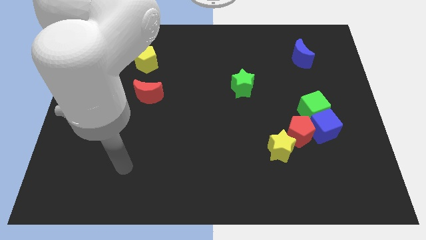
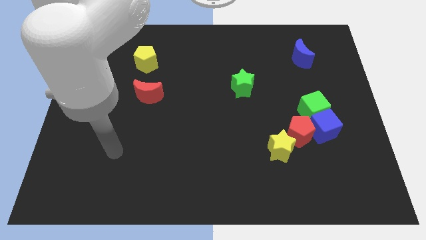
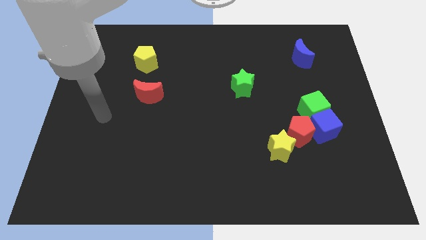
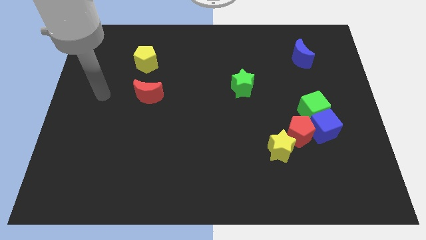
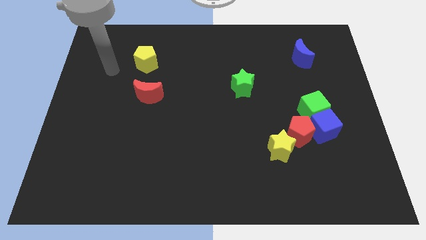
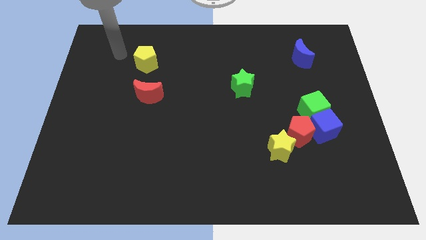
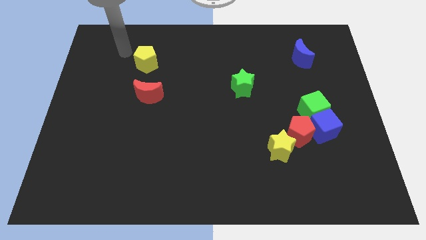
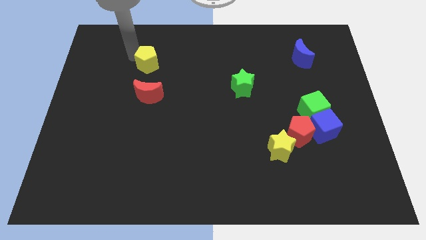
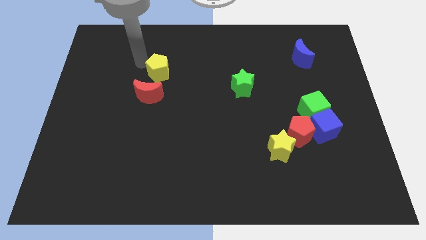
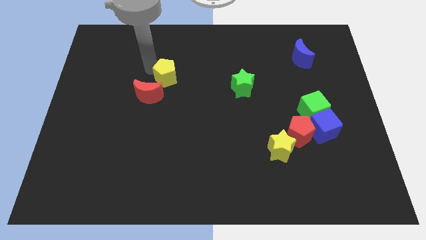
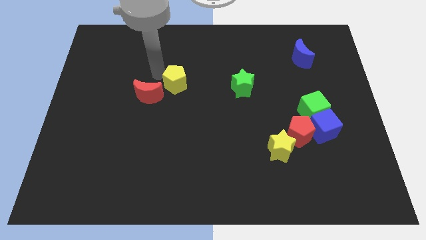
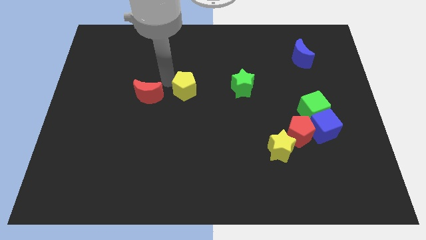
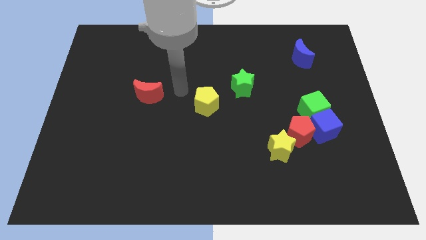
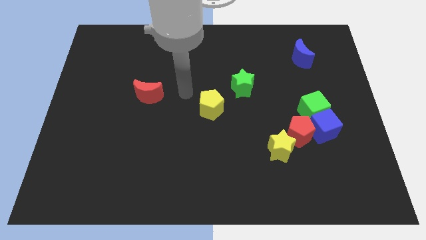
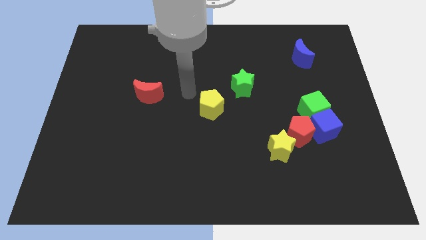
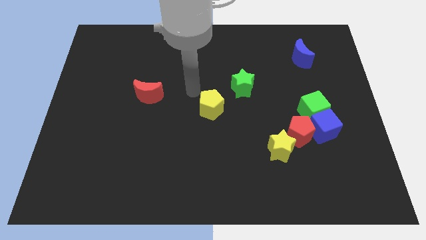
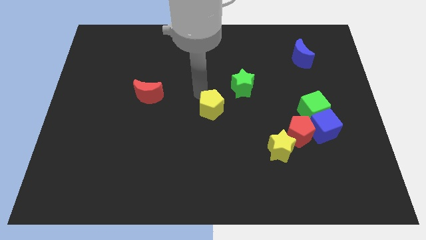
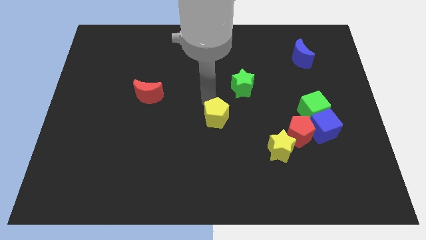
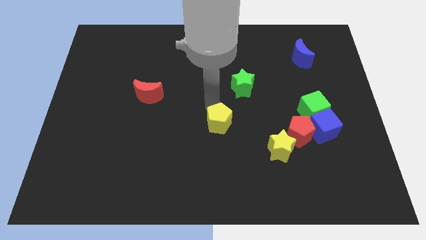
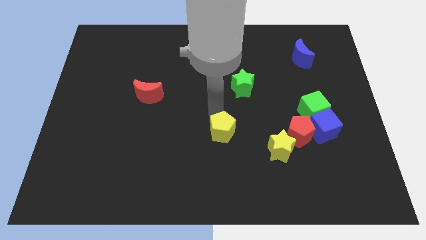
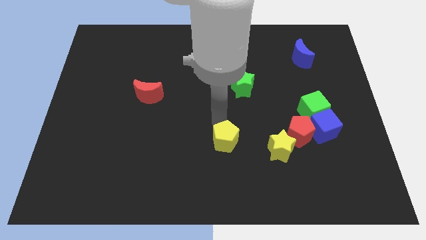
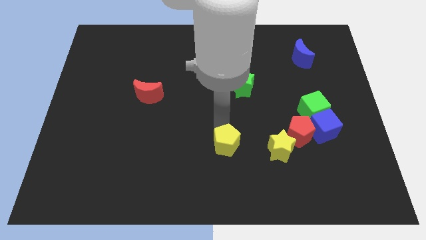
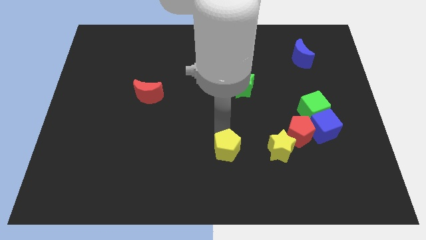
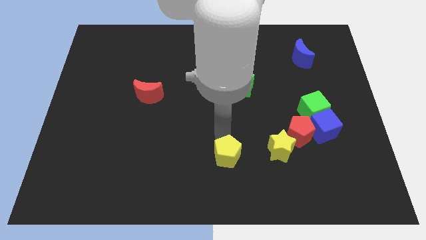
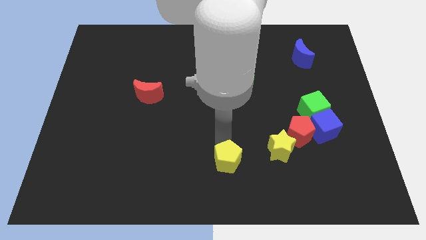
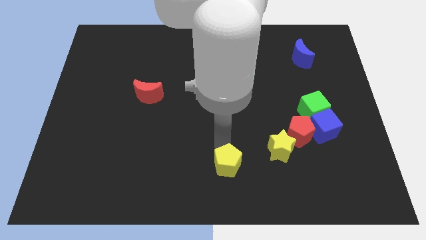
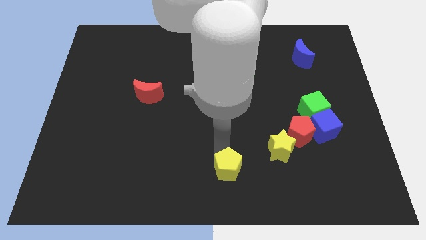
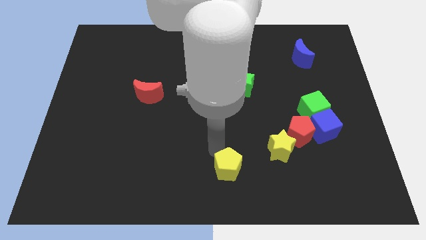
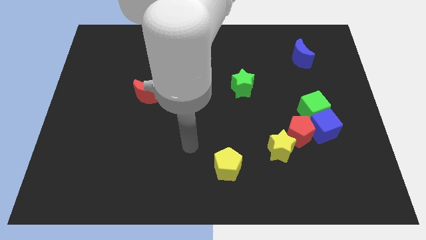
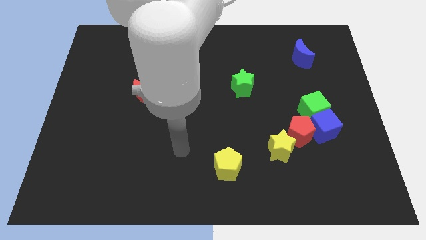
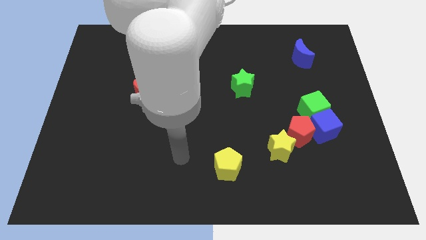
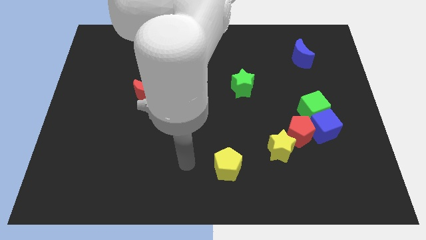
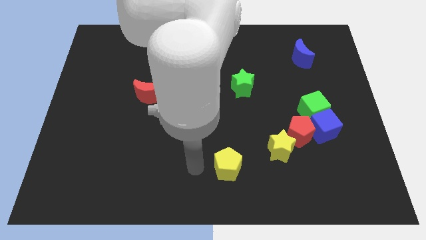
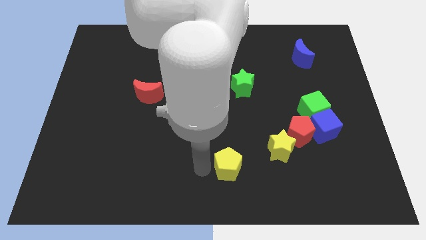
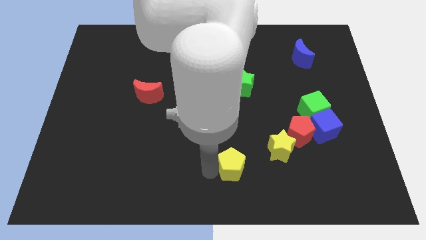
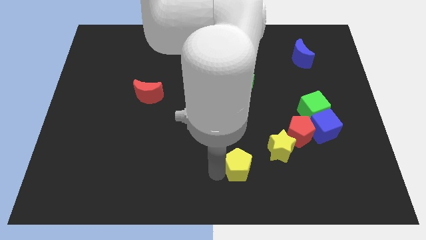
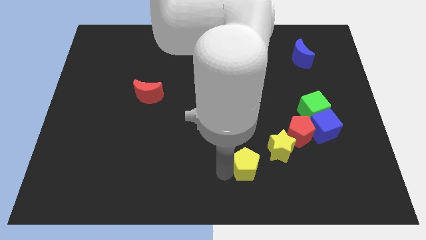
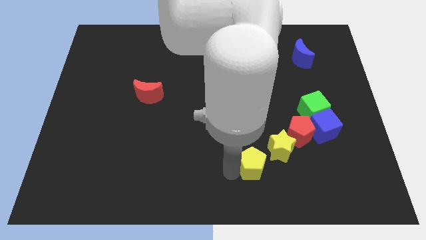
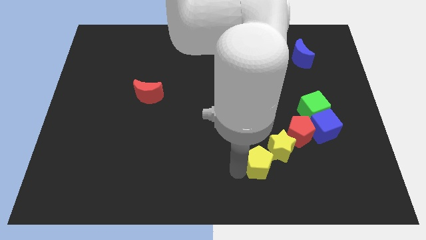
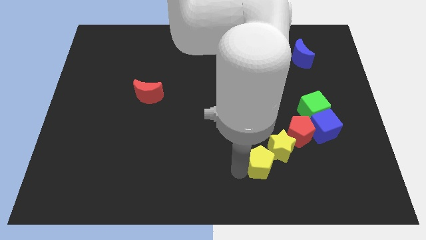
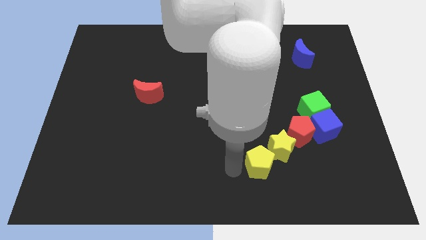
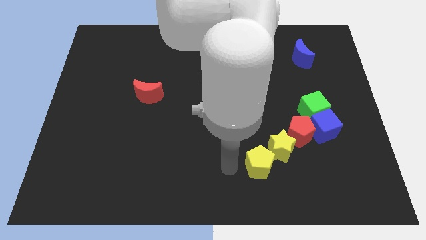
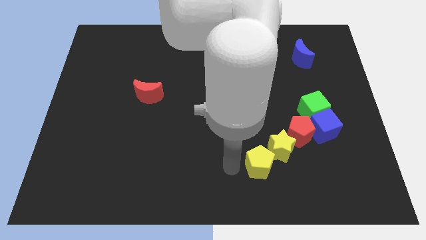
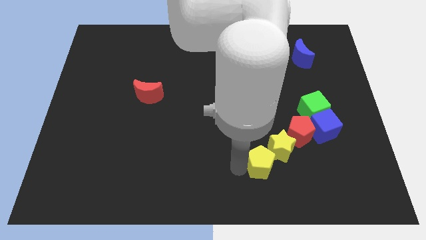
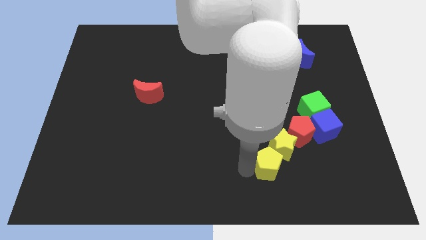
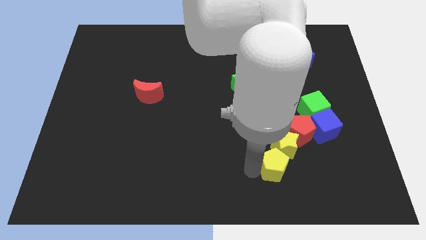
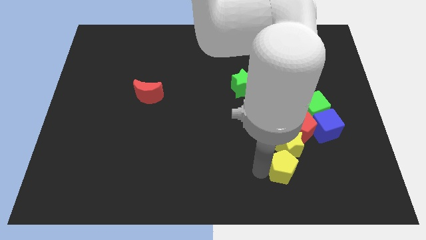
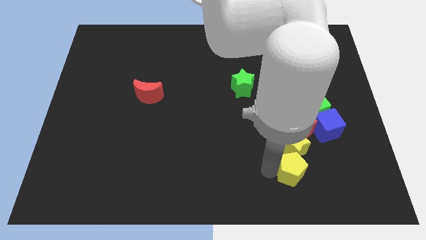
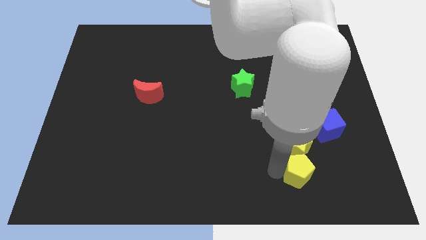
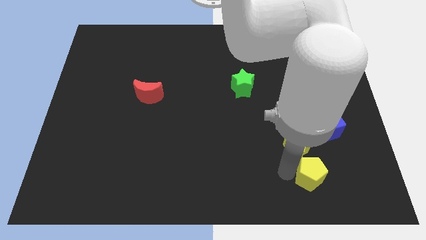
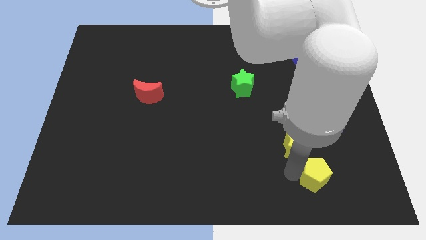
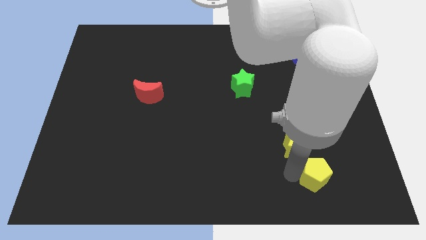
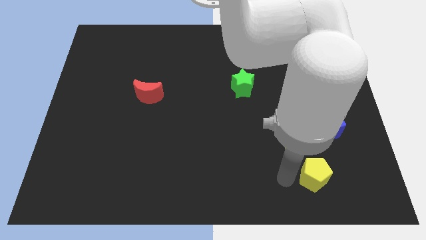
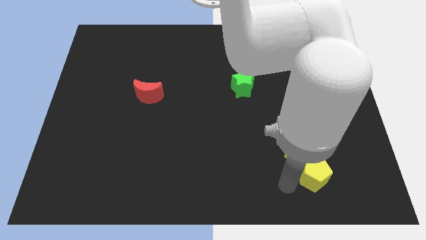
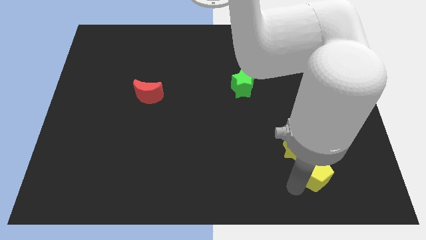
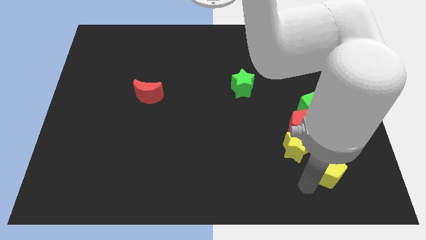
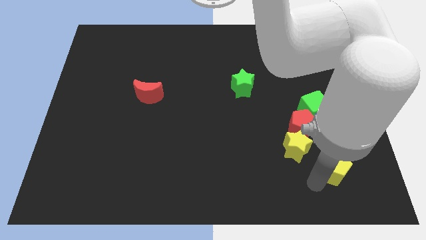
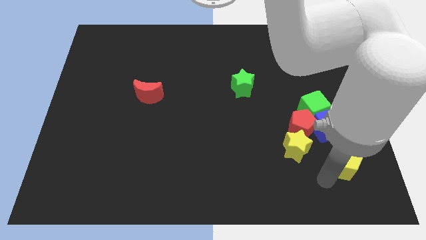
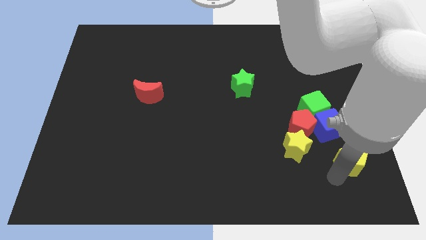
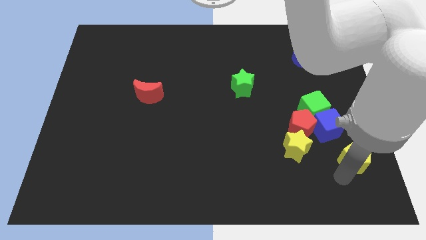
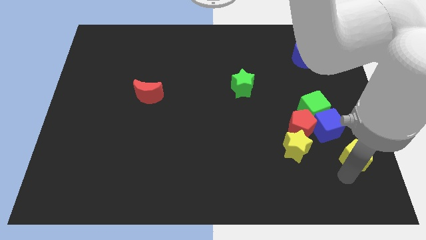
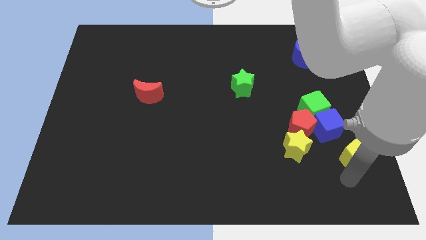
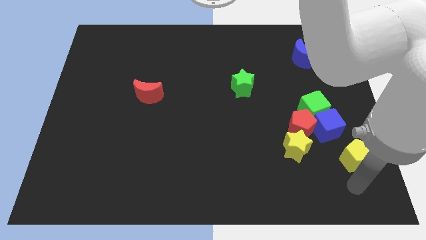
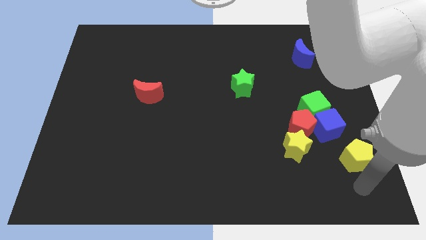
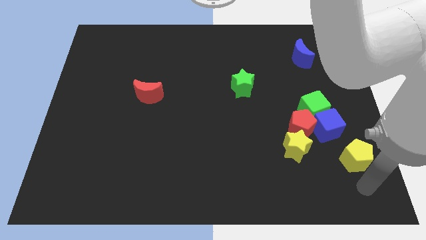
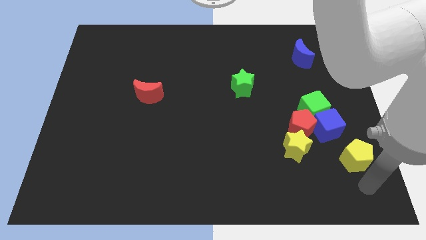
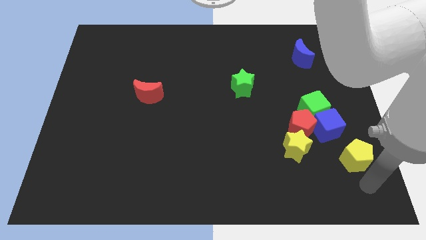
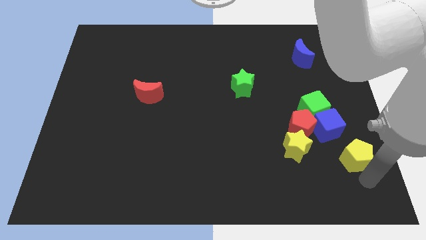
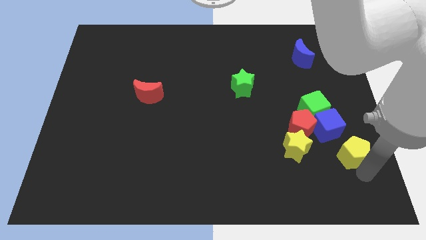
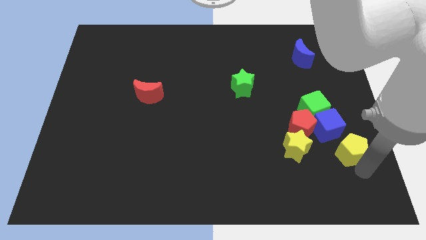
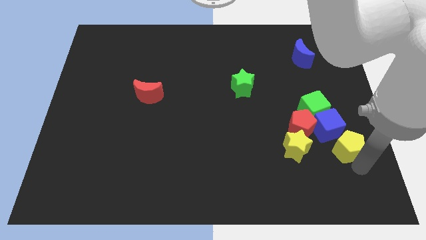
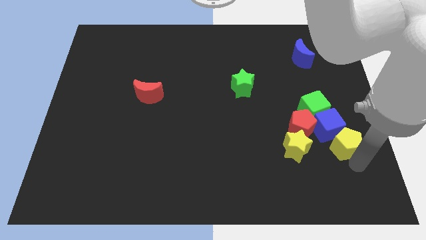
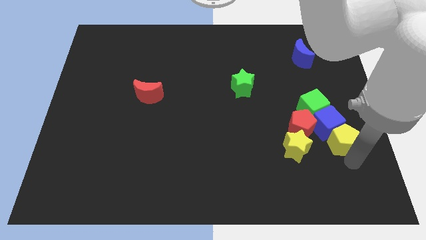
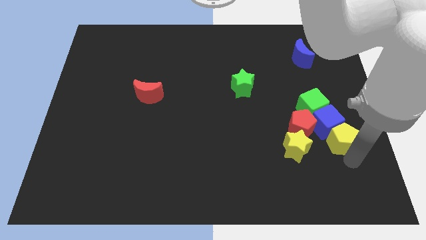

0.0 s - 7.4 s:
push the yellow pentagon close to the blue cube

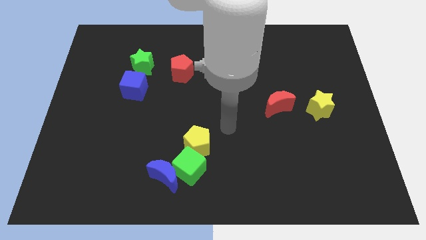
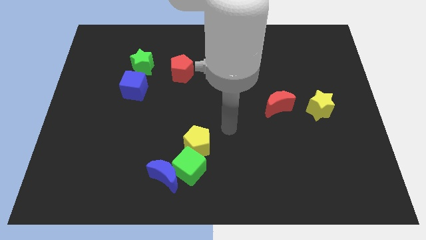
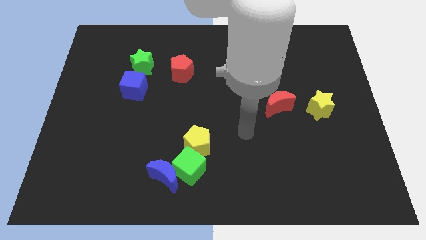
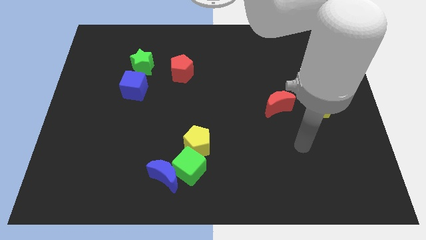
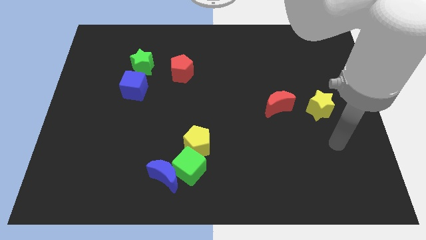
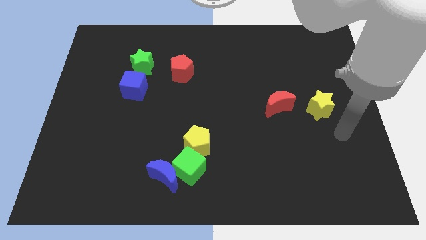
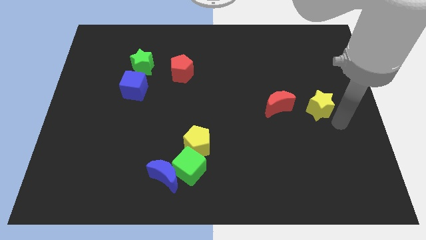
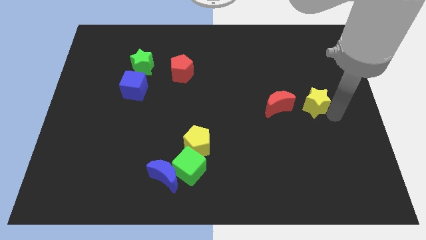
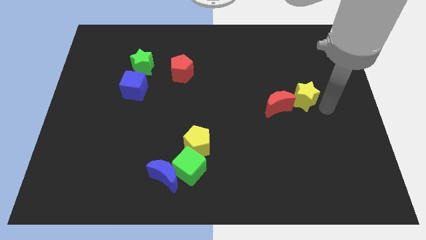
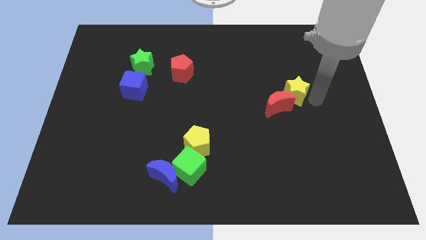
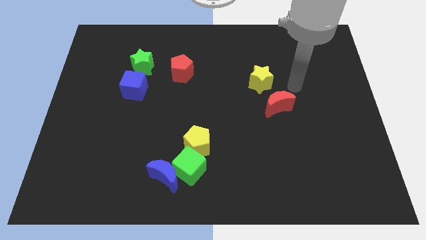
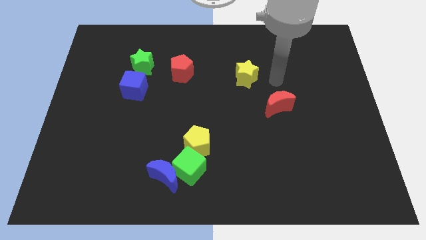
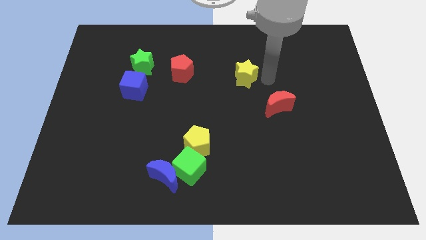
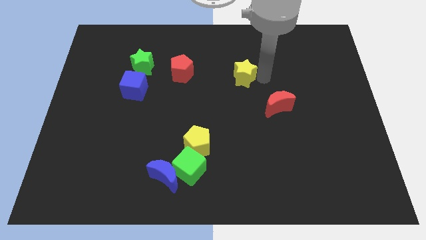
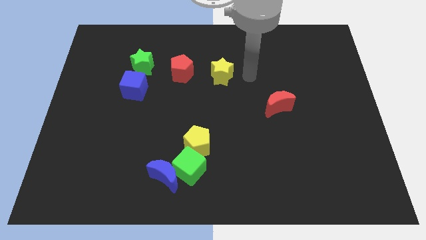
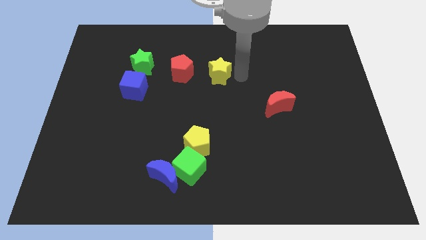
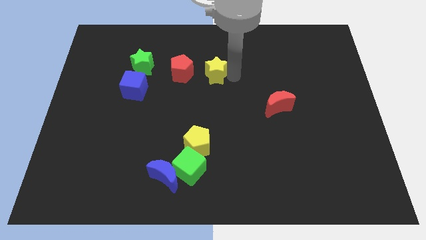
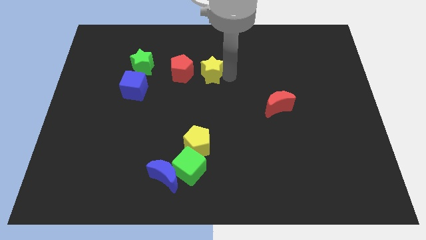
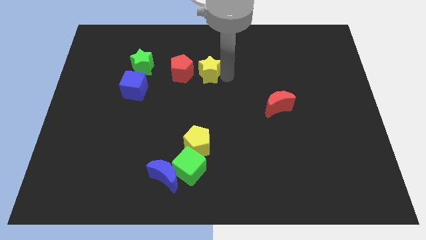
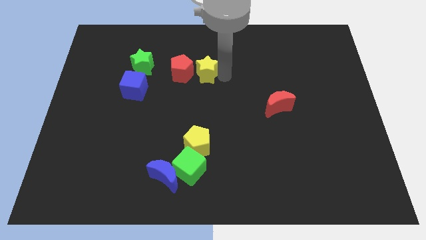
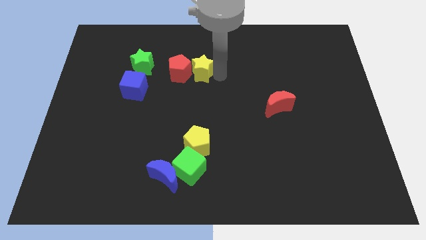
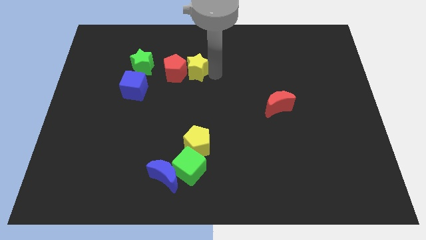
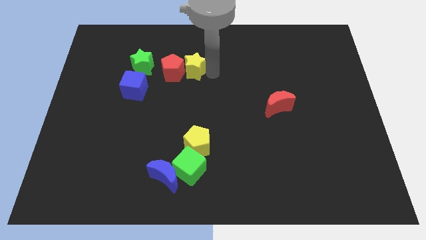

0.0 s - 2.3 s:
slide the yellow star to the red pentagon
